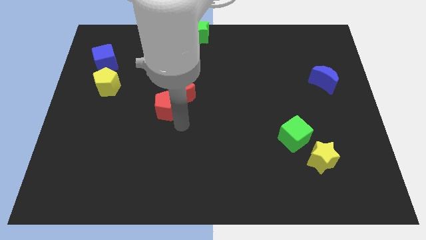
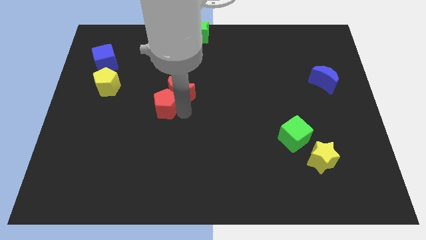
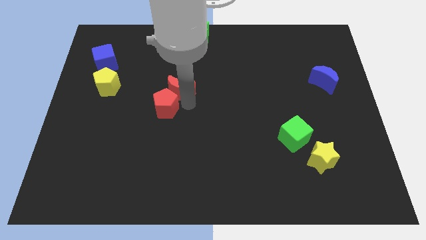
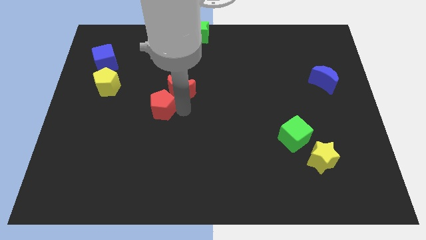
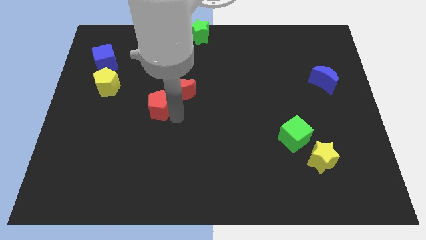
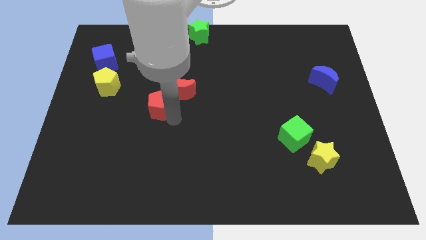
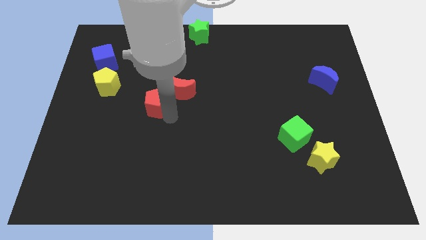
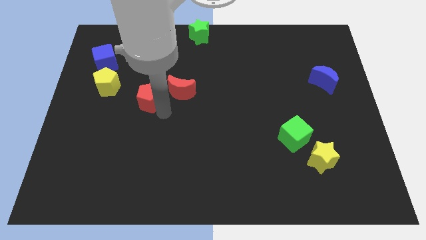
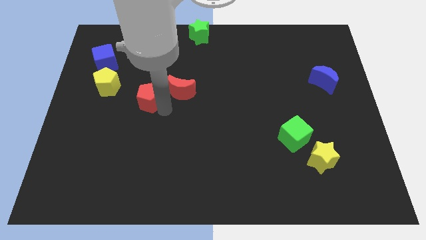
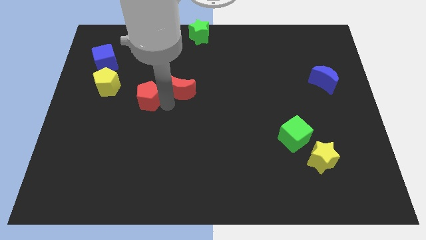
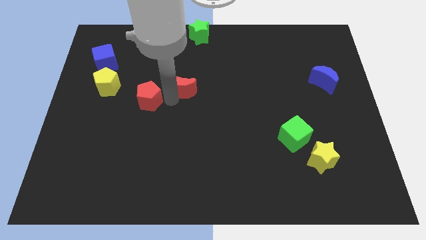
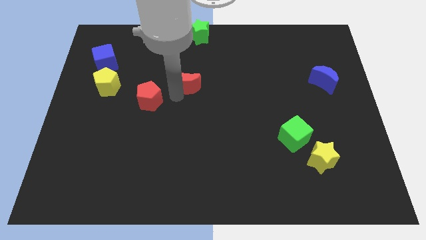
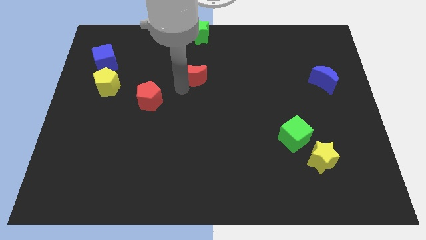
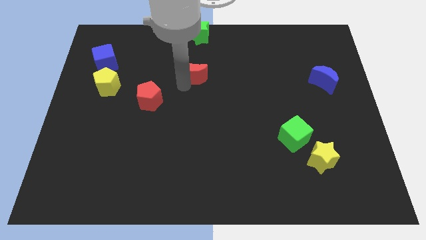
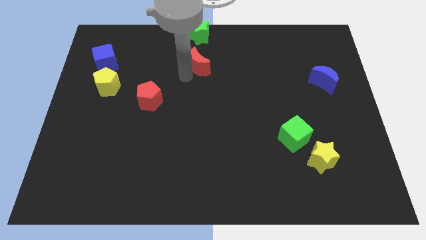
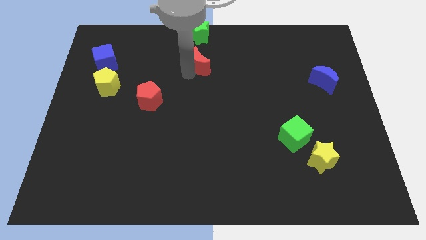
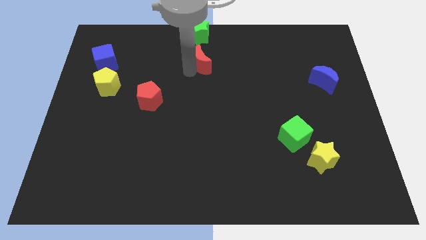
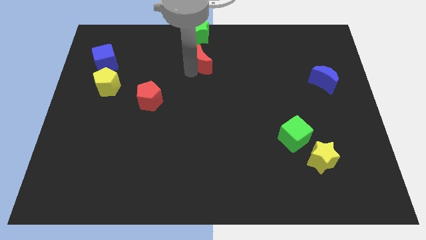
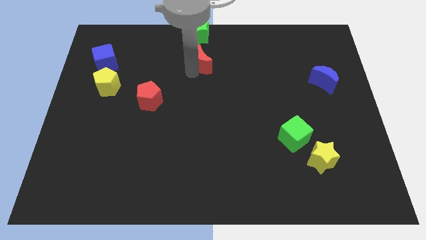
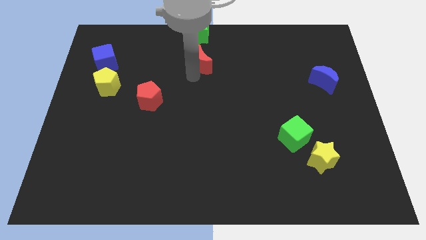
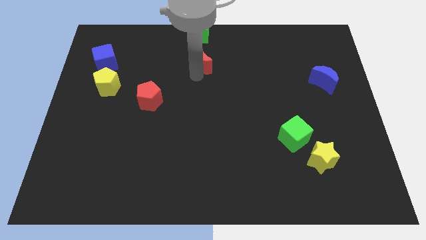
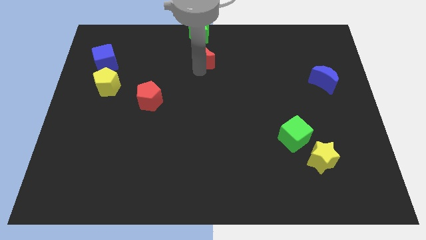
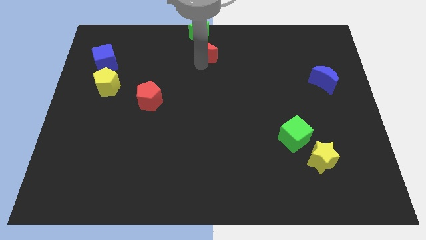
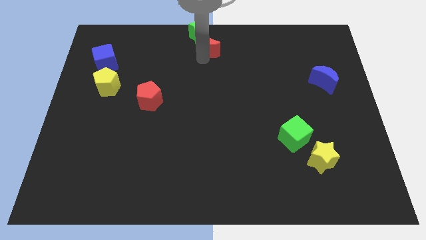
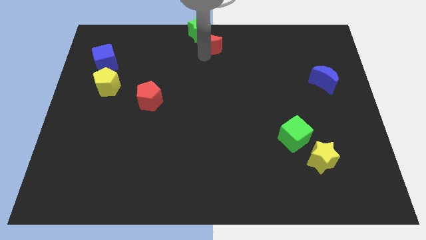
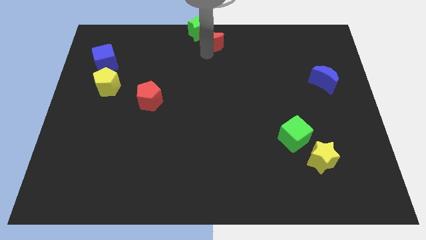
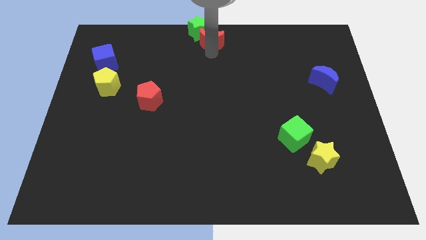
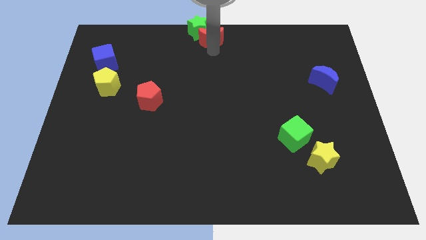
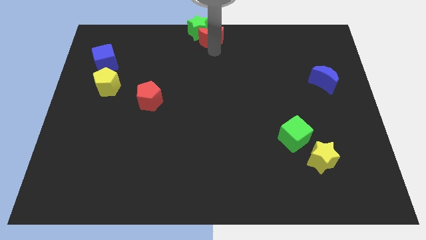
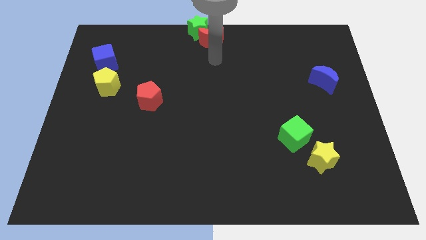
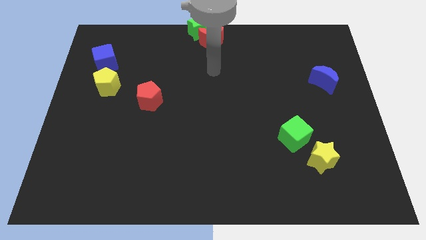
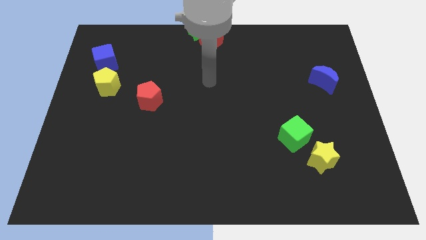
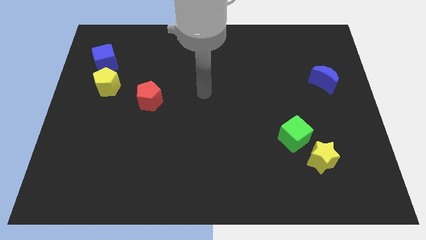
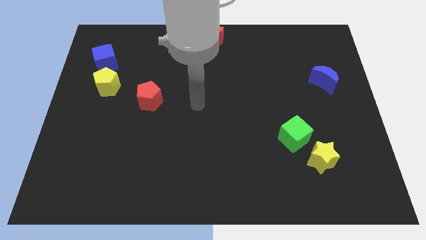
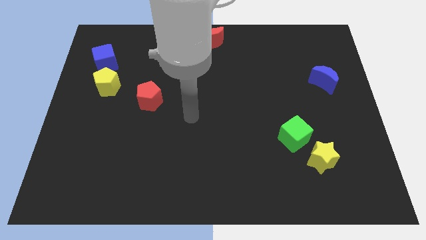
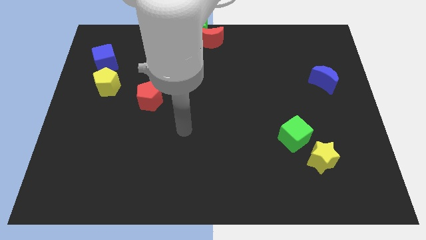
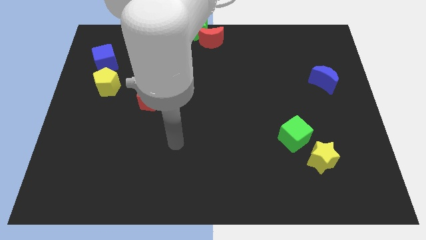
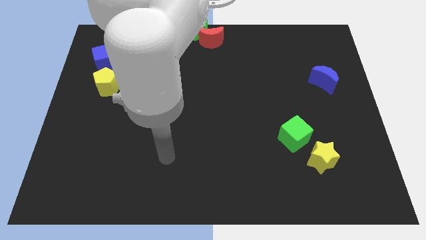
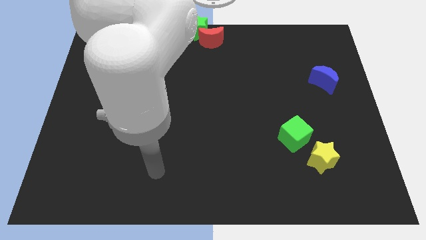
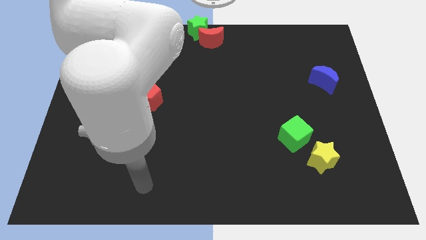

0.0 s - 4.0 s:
move red moon below green star

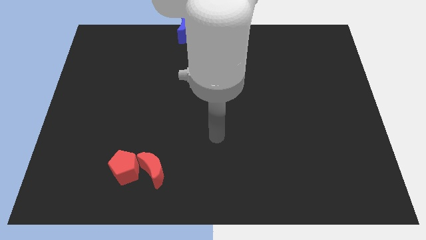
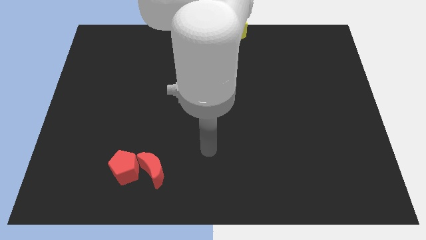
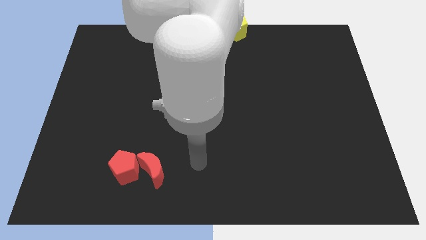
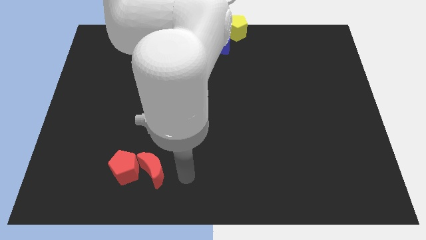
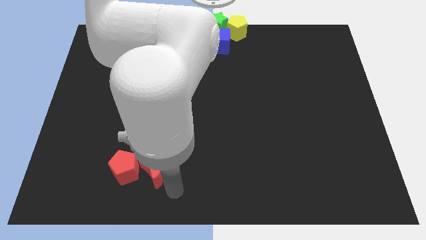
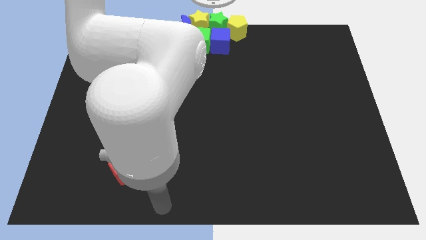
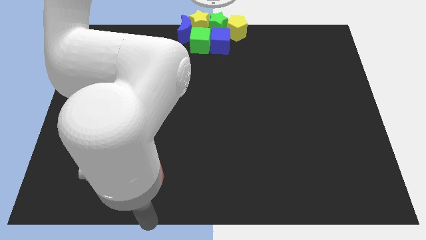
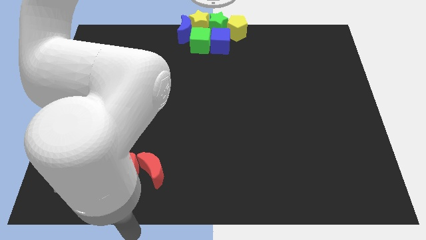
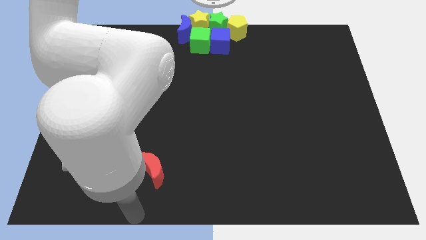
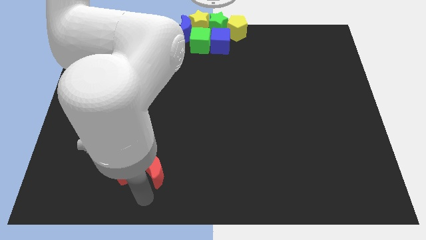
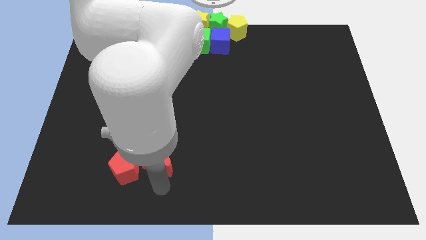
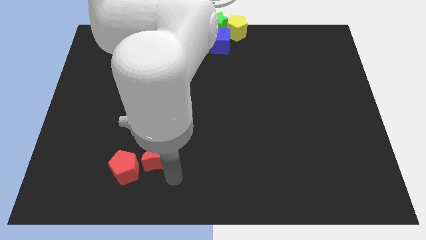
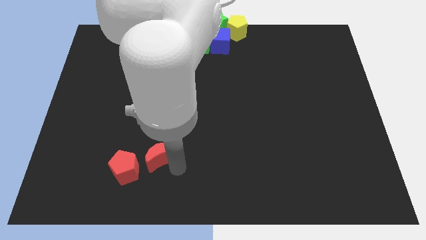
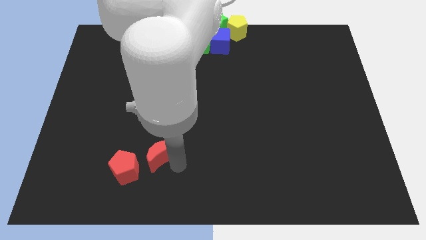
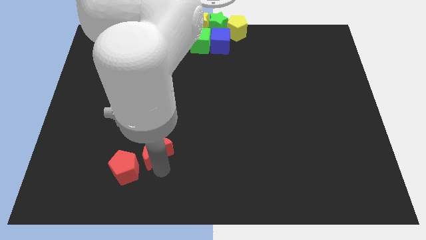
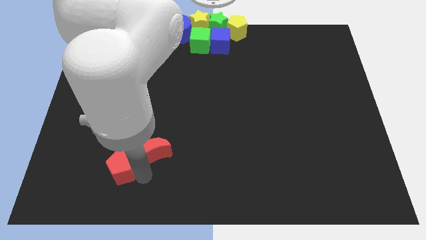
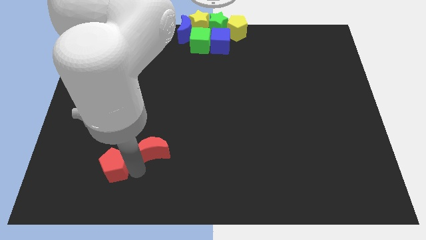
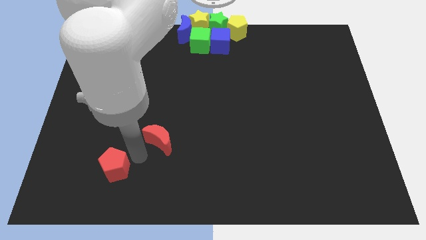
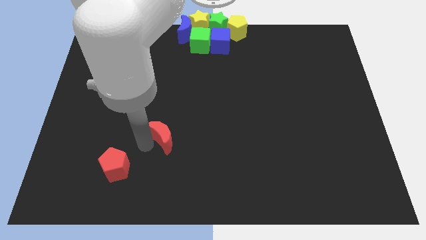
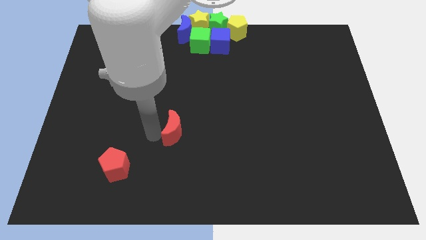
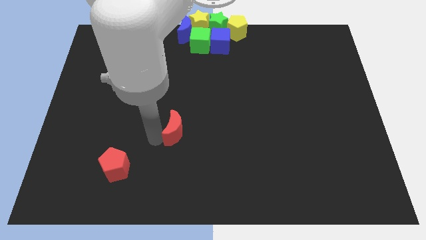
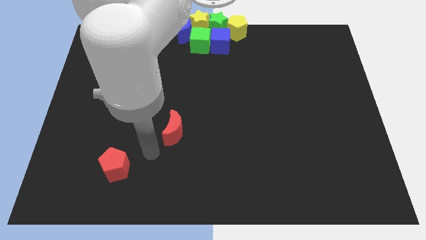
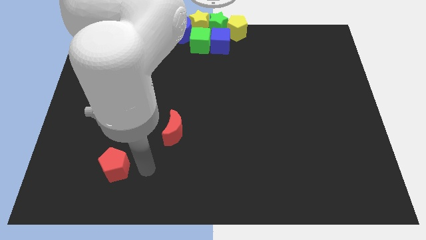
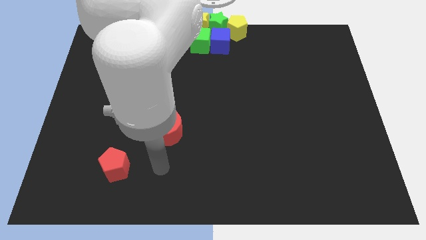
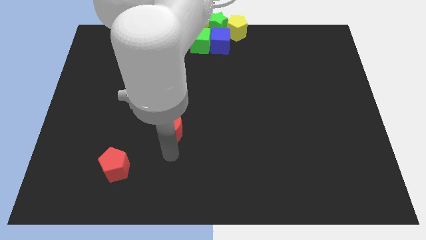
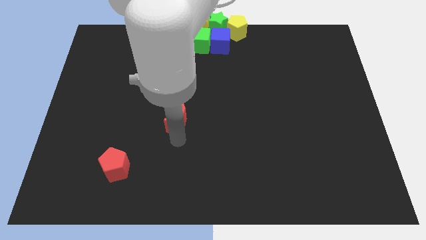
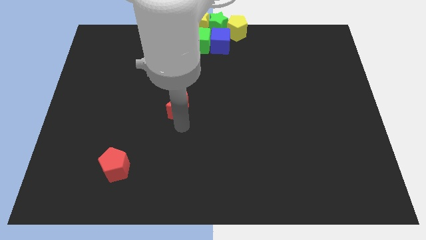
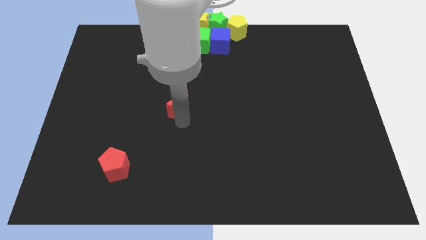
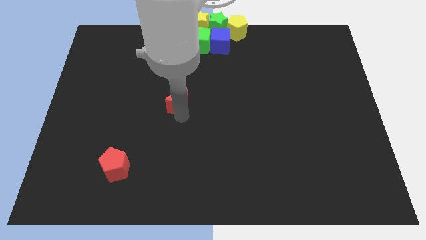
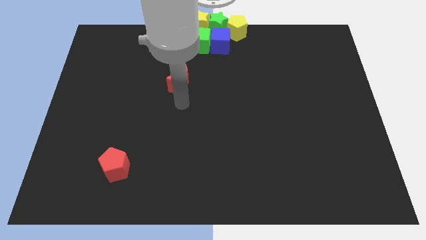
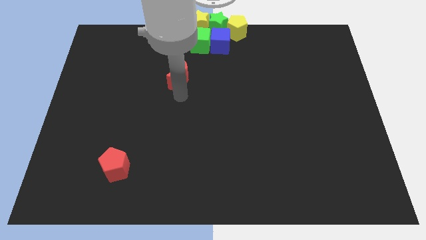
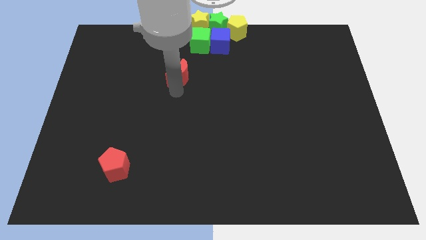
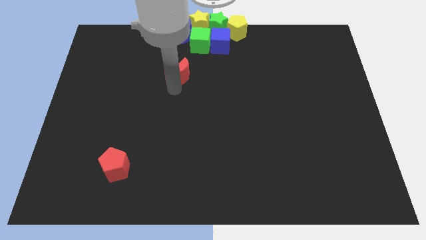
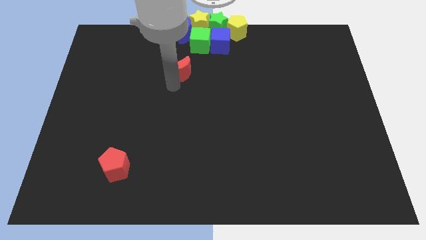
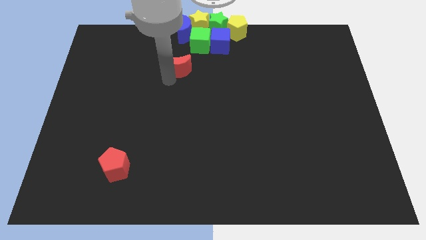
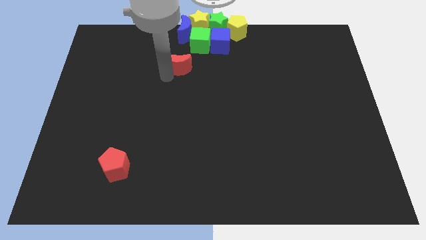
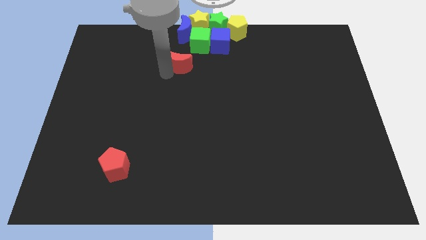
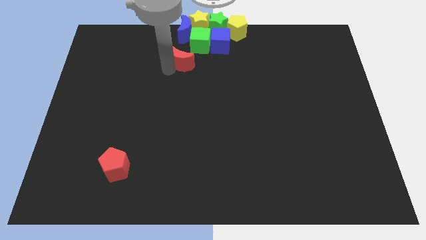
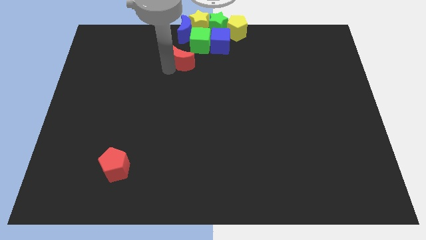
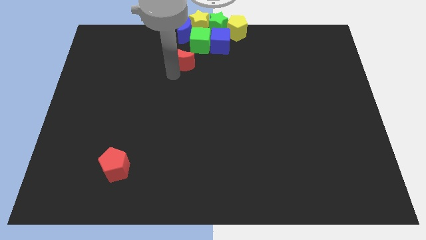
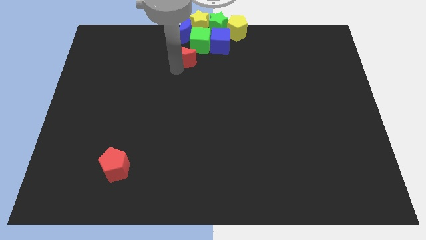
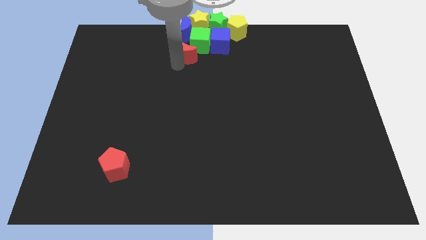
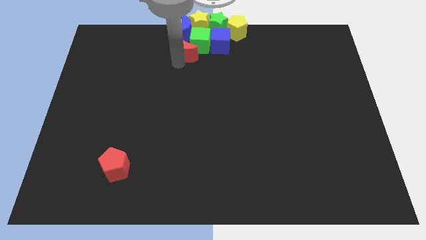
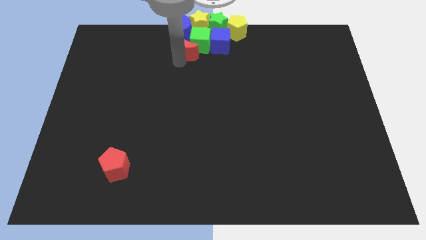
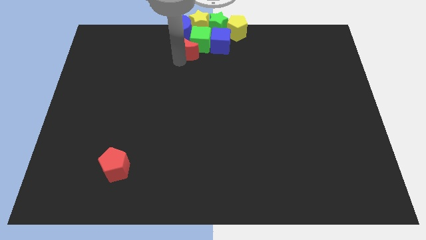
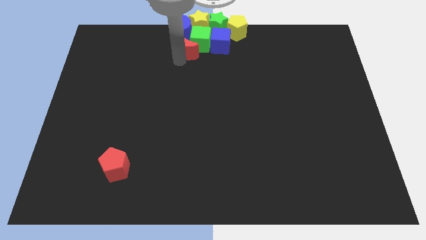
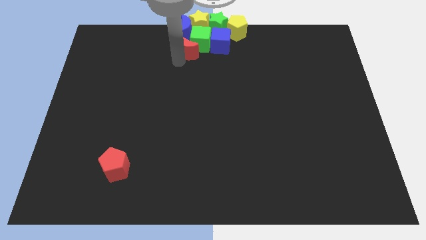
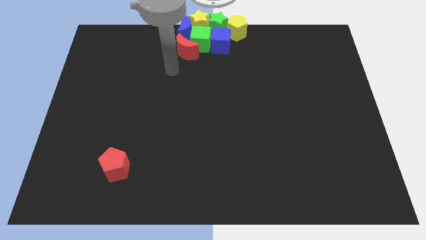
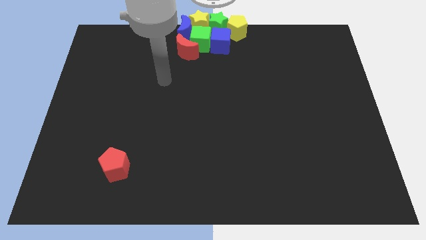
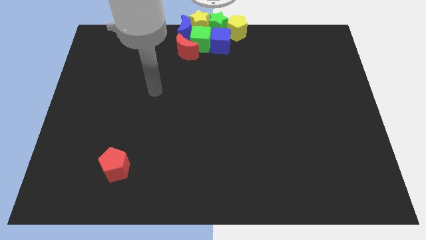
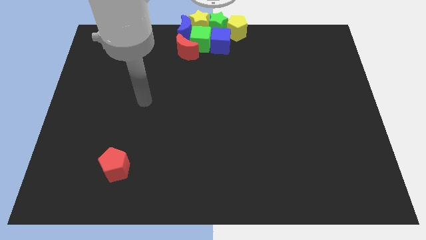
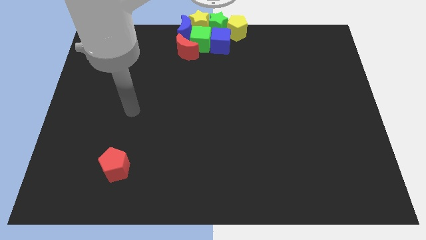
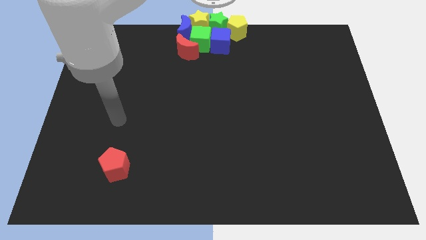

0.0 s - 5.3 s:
push the red crescent to the bottom of the green cube
